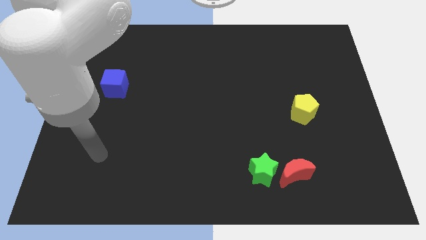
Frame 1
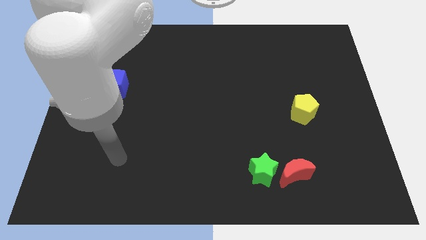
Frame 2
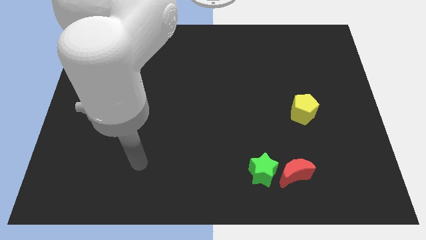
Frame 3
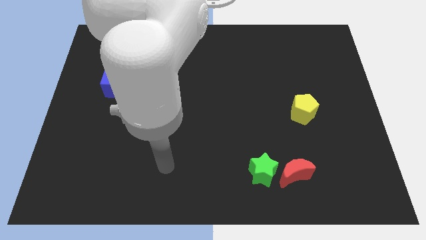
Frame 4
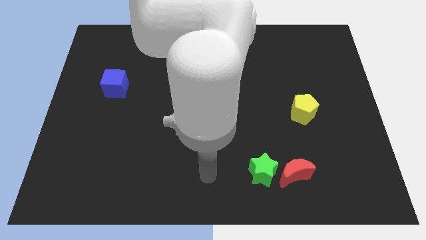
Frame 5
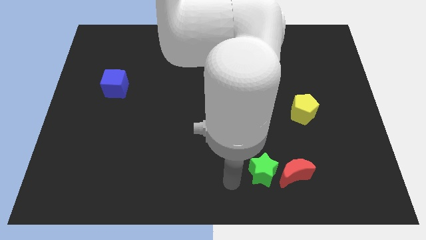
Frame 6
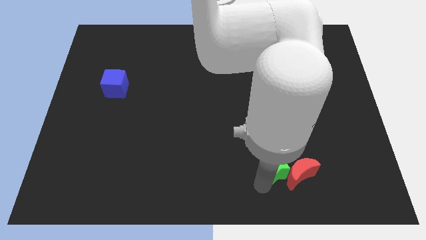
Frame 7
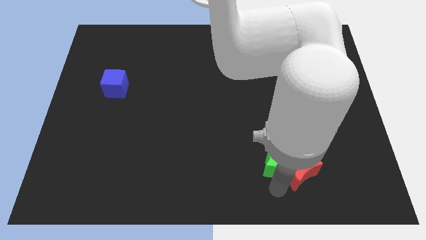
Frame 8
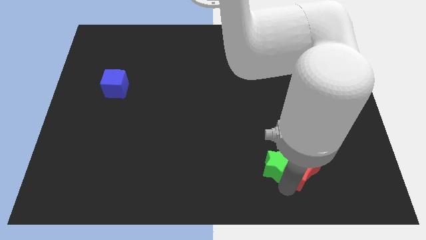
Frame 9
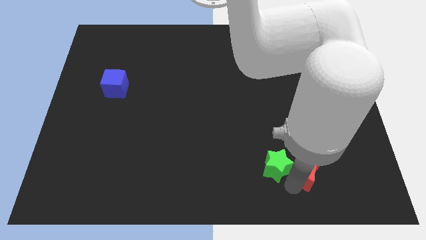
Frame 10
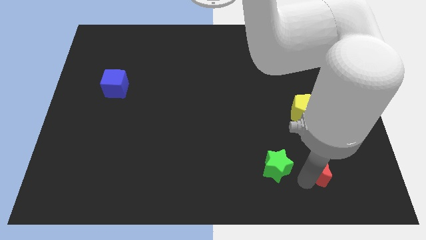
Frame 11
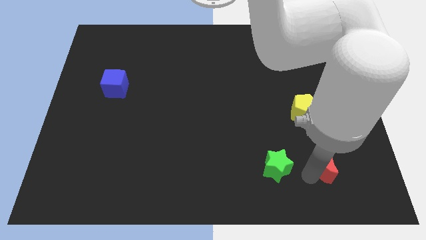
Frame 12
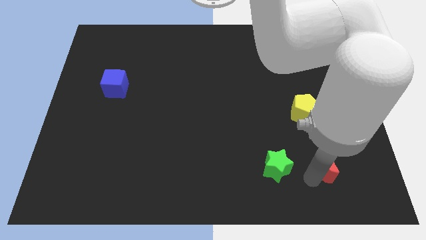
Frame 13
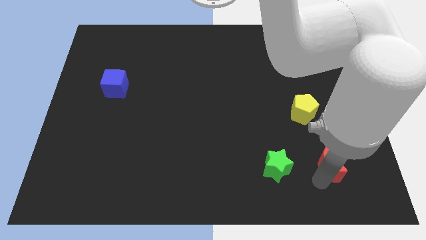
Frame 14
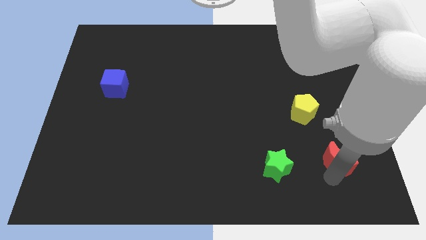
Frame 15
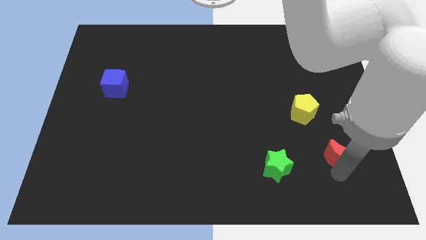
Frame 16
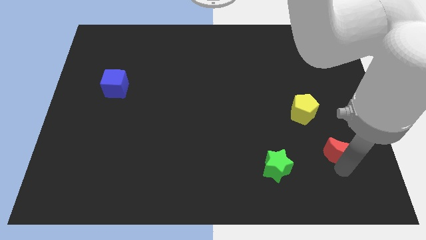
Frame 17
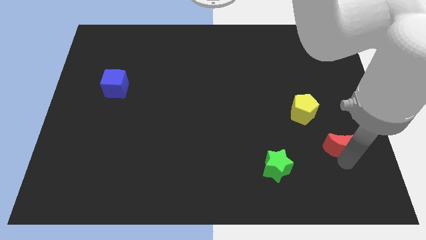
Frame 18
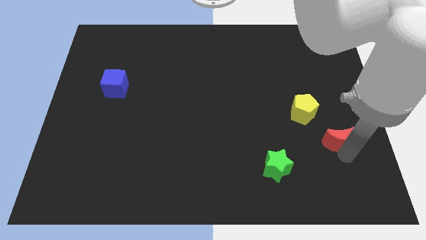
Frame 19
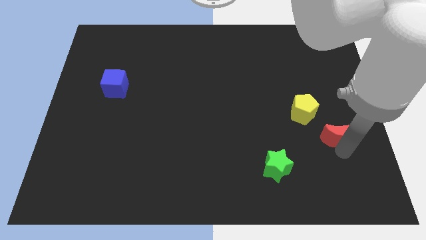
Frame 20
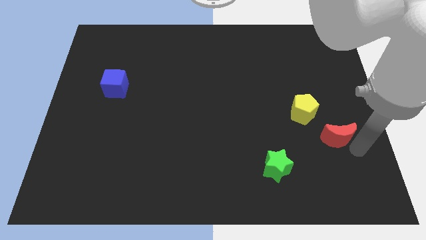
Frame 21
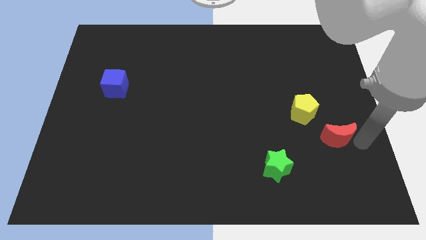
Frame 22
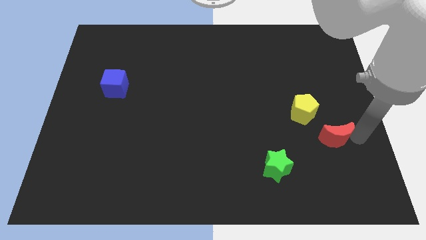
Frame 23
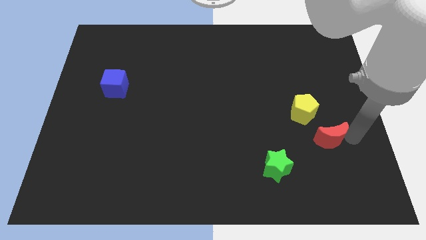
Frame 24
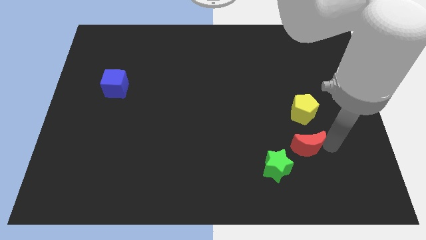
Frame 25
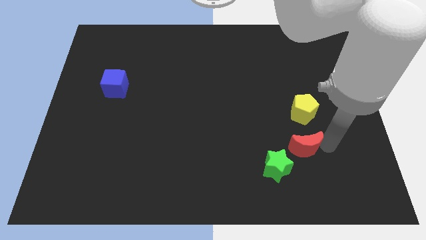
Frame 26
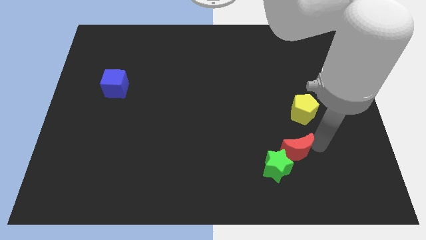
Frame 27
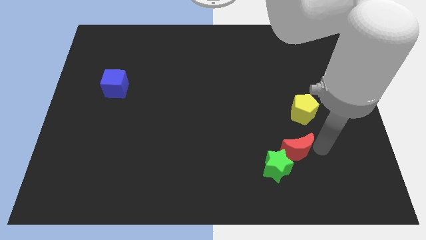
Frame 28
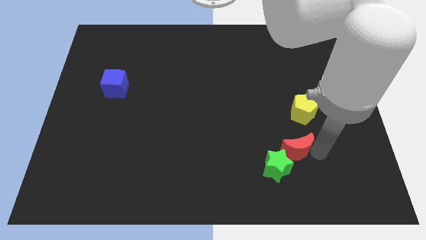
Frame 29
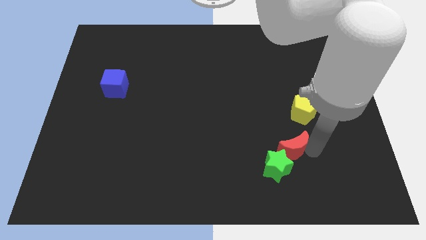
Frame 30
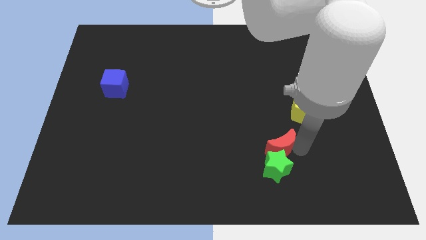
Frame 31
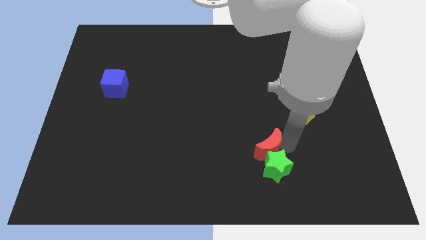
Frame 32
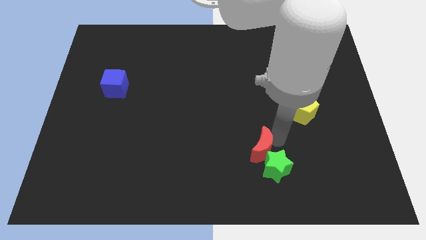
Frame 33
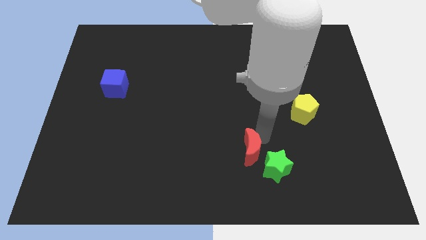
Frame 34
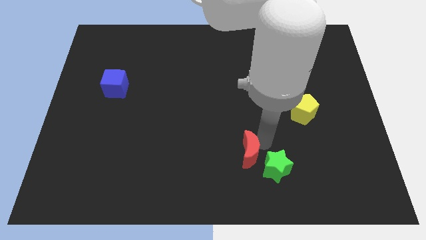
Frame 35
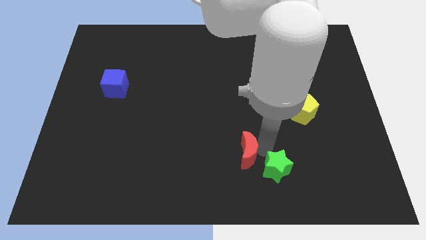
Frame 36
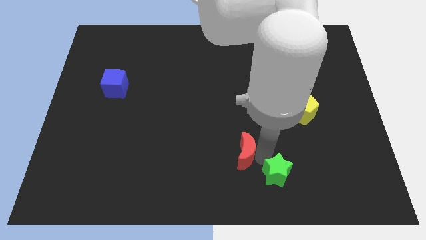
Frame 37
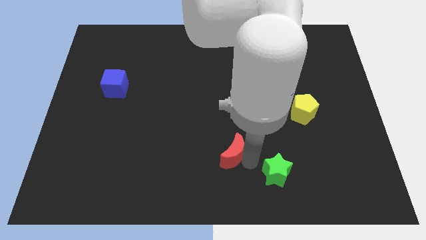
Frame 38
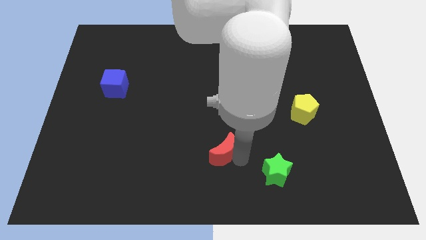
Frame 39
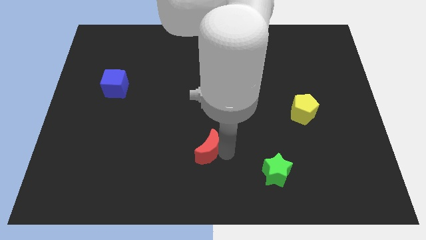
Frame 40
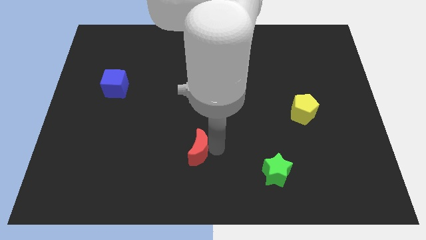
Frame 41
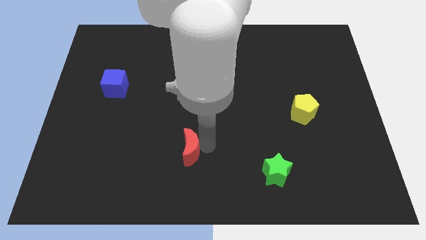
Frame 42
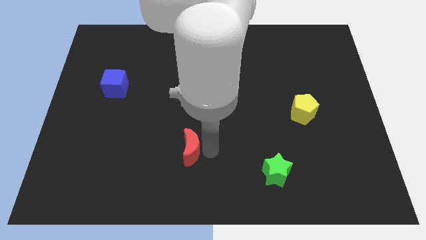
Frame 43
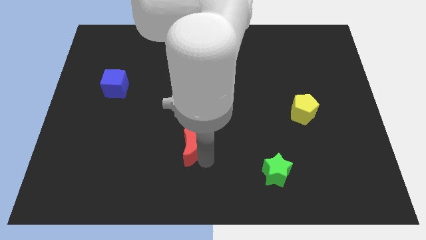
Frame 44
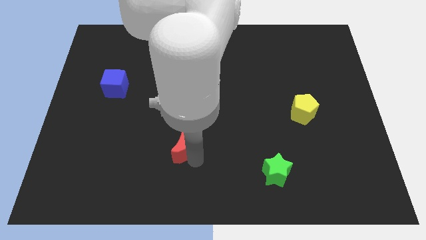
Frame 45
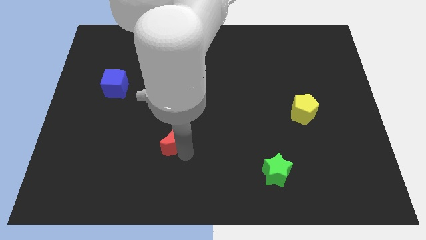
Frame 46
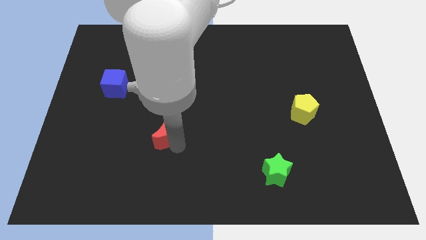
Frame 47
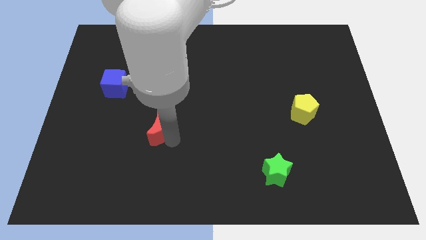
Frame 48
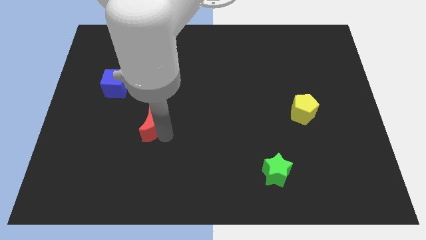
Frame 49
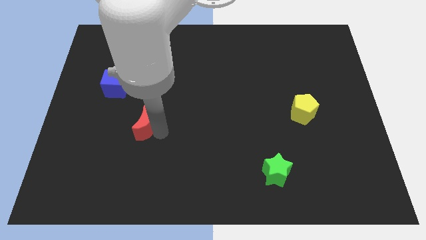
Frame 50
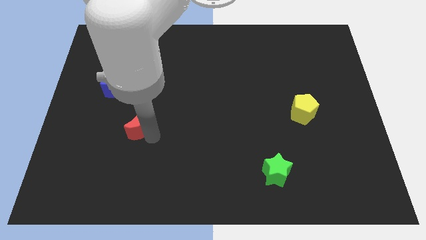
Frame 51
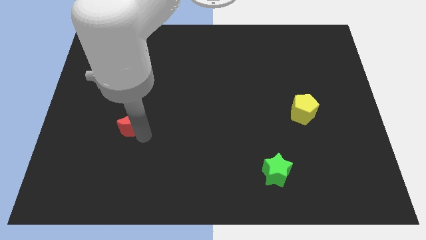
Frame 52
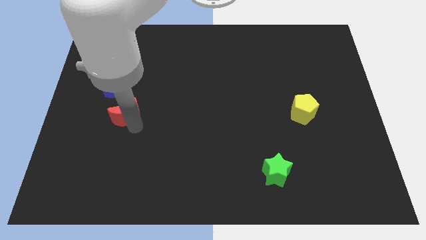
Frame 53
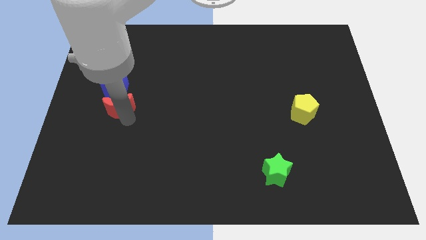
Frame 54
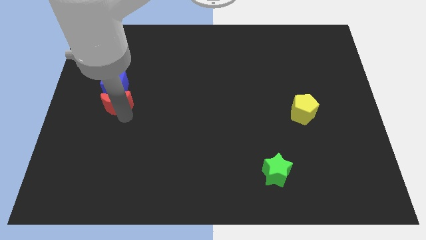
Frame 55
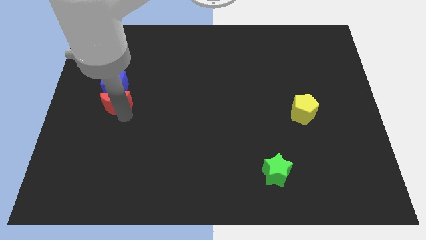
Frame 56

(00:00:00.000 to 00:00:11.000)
push the red moon towards the blue block

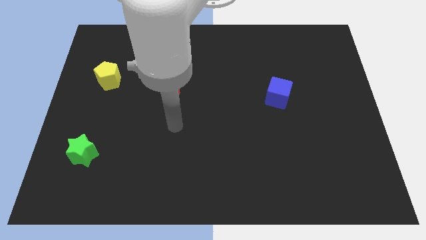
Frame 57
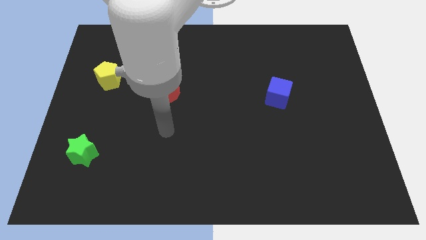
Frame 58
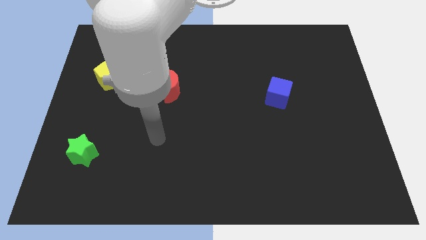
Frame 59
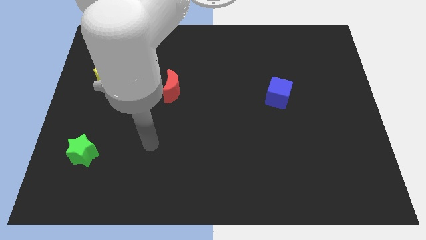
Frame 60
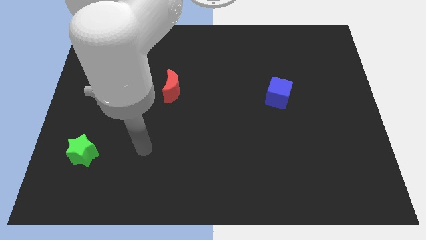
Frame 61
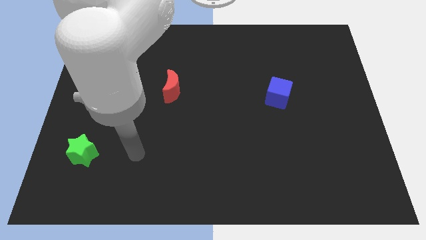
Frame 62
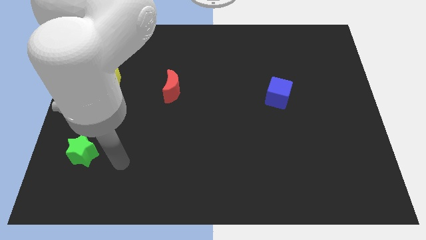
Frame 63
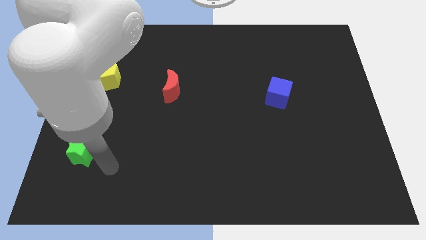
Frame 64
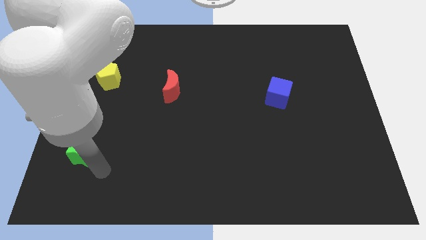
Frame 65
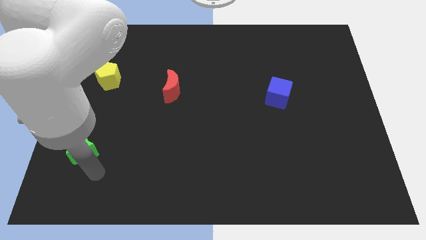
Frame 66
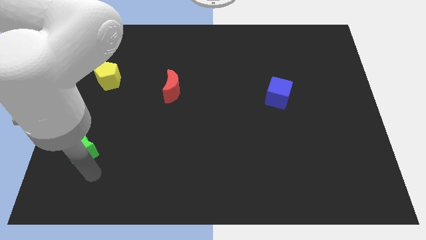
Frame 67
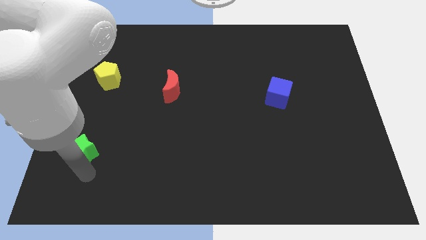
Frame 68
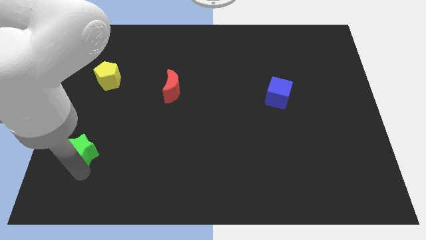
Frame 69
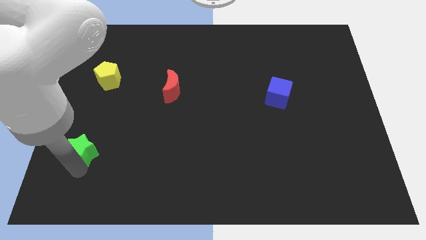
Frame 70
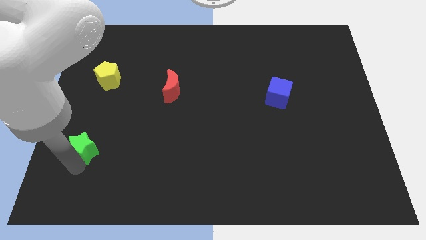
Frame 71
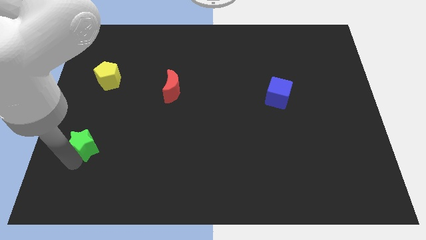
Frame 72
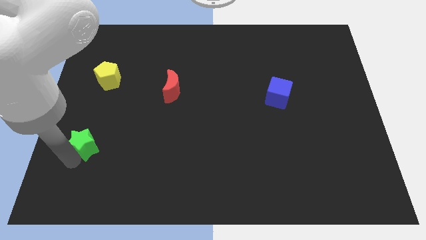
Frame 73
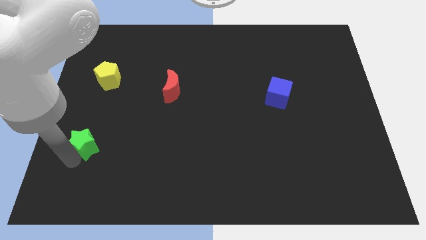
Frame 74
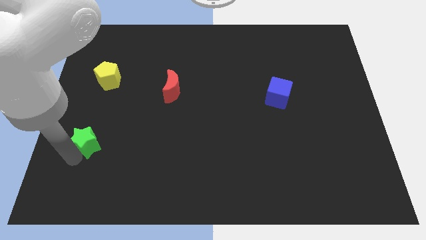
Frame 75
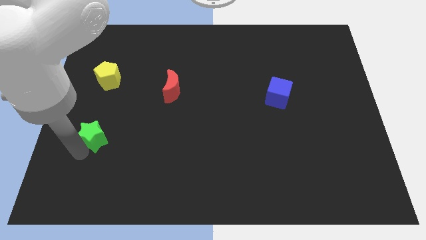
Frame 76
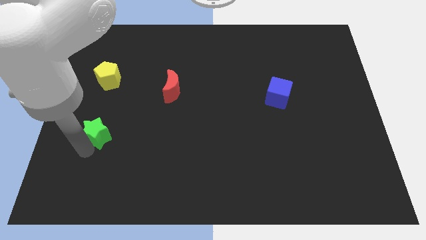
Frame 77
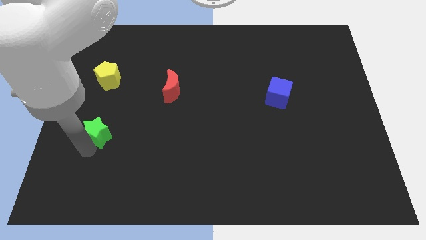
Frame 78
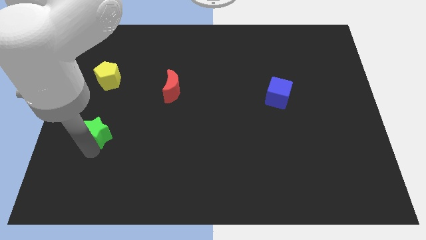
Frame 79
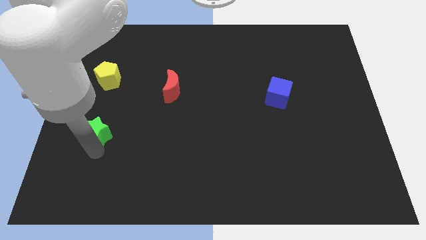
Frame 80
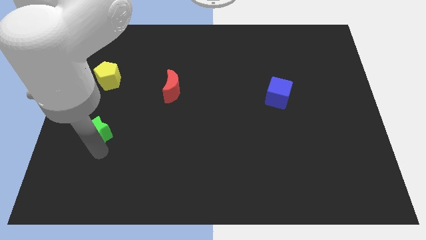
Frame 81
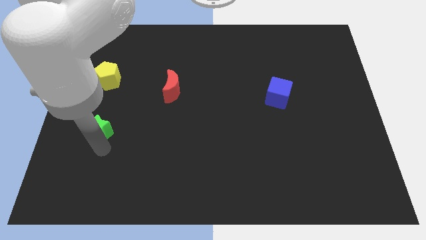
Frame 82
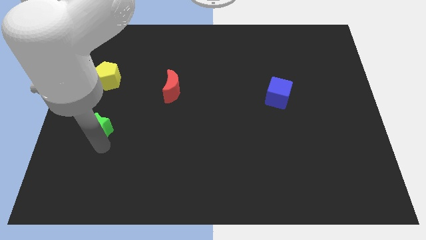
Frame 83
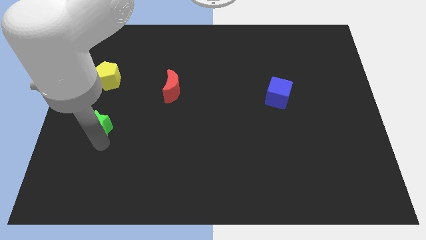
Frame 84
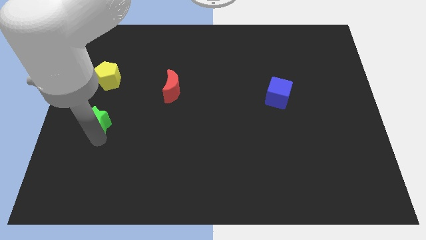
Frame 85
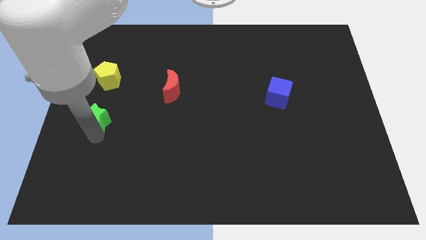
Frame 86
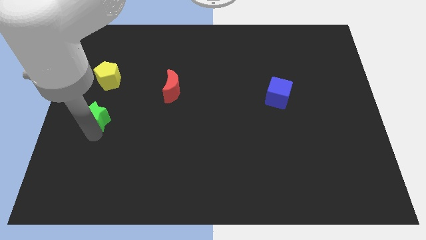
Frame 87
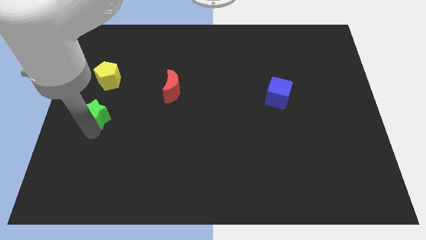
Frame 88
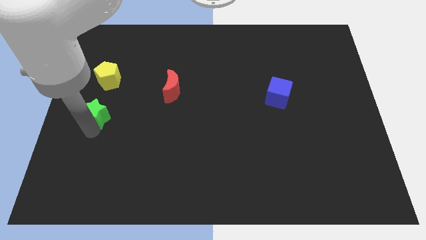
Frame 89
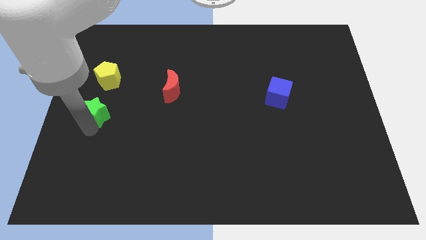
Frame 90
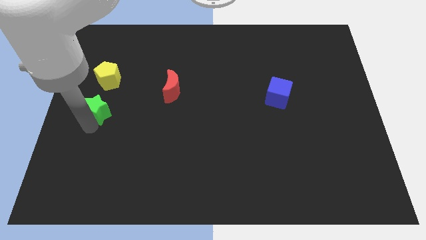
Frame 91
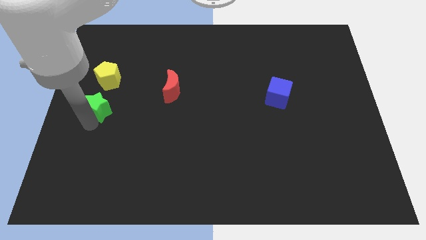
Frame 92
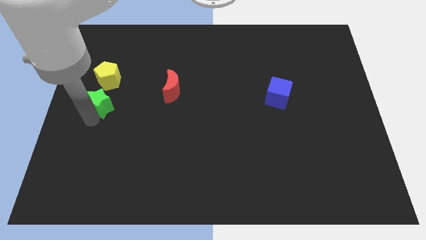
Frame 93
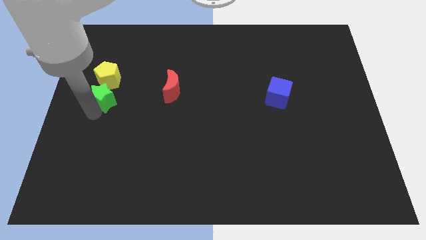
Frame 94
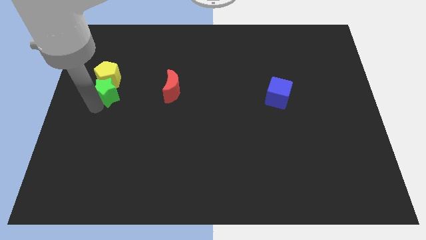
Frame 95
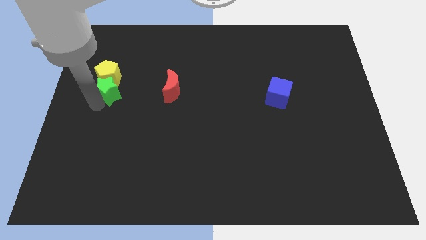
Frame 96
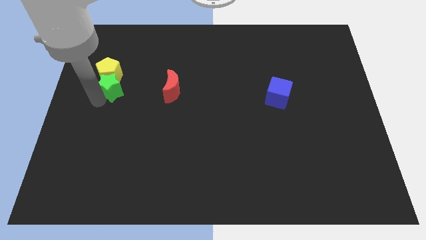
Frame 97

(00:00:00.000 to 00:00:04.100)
slide the green block next to the yellow pentagon
